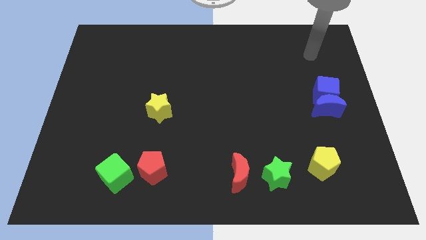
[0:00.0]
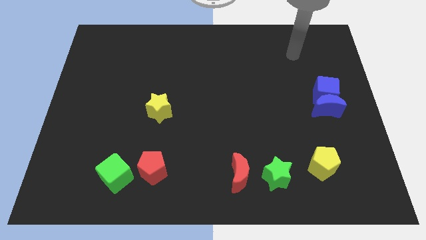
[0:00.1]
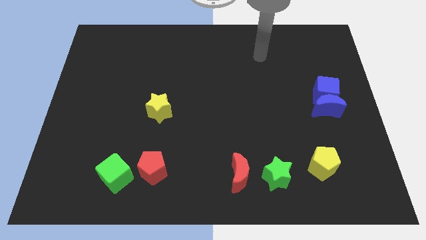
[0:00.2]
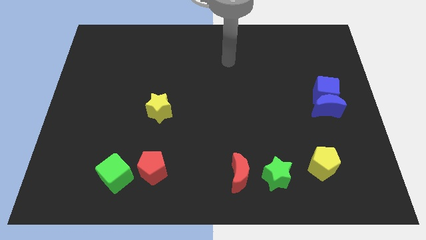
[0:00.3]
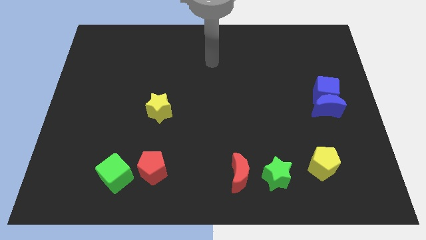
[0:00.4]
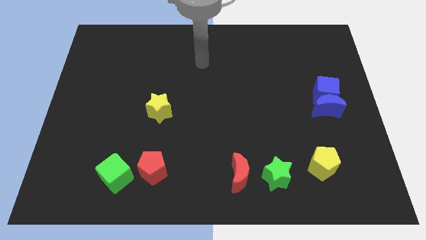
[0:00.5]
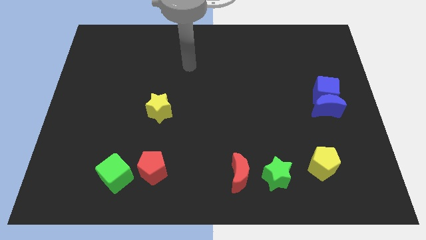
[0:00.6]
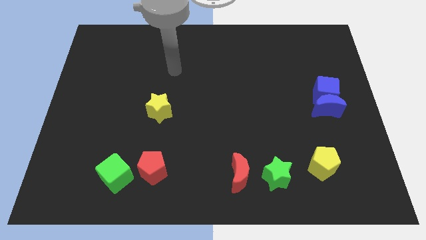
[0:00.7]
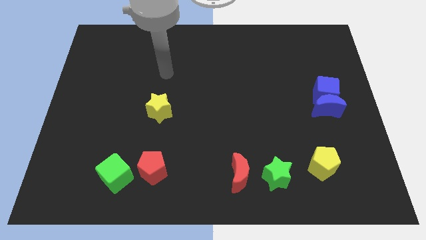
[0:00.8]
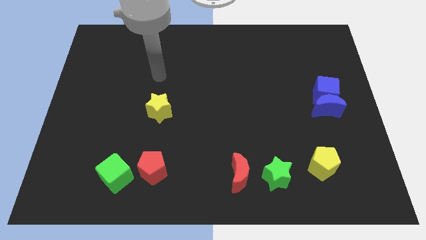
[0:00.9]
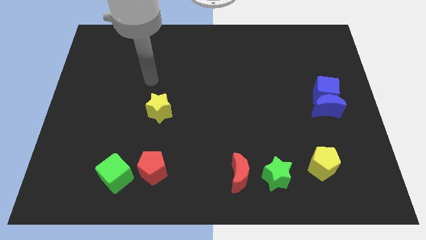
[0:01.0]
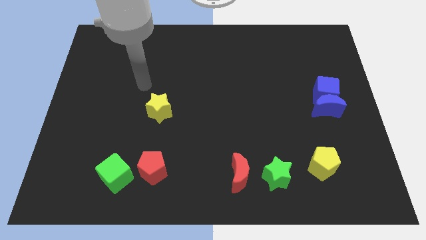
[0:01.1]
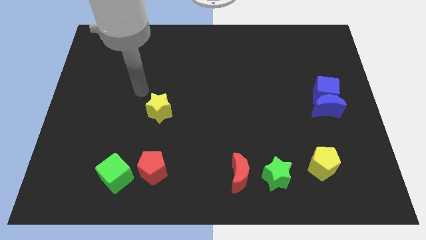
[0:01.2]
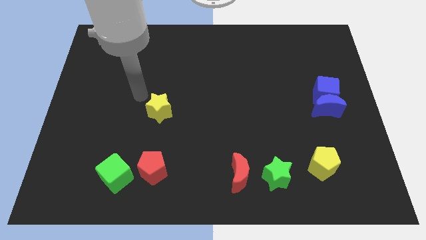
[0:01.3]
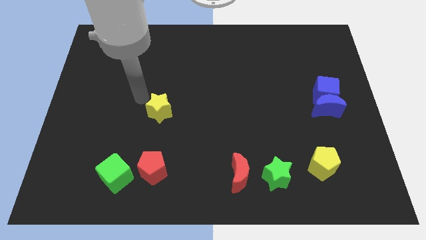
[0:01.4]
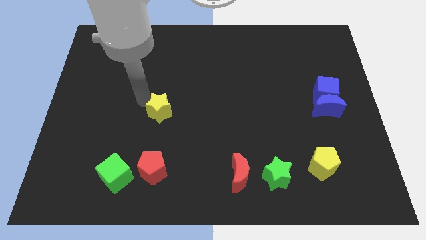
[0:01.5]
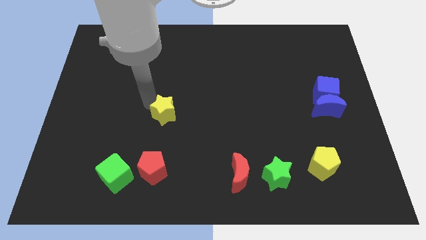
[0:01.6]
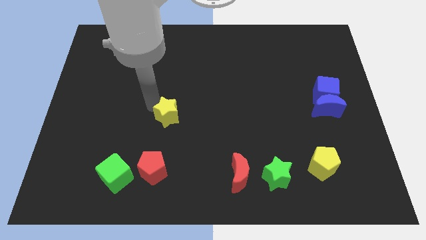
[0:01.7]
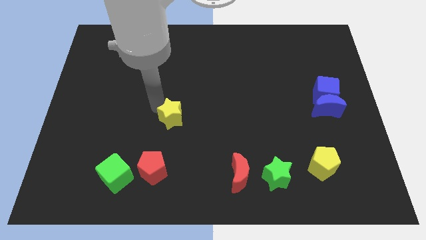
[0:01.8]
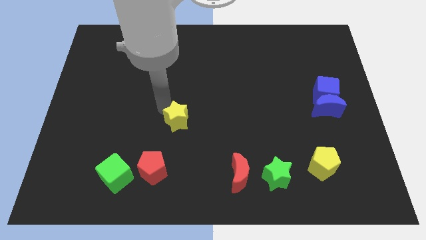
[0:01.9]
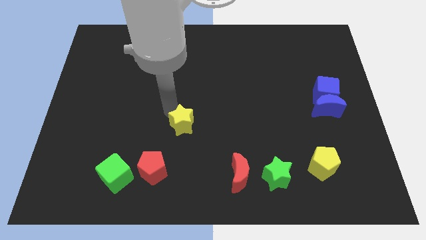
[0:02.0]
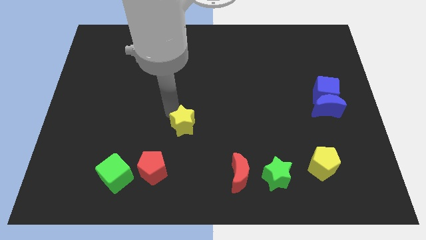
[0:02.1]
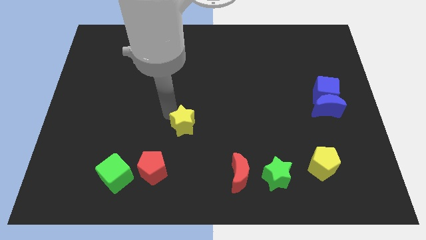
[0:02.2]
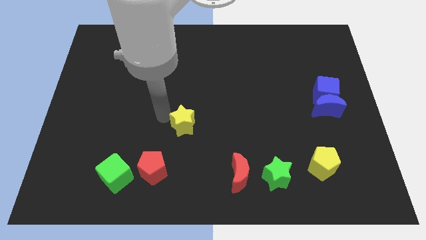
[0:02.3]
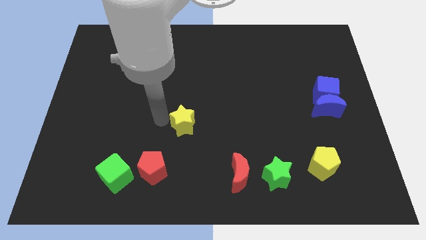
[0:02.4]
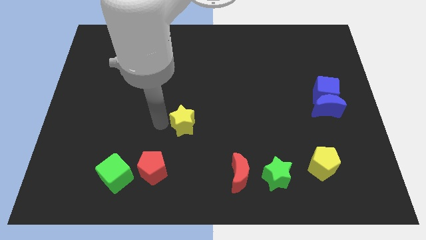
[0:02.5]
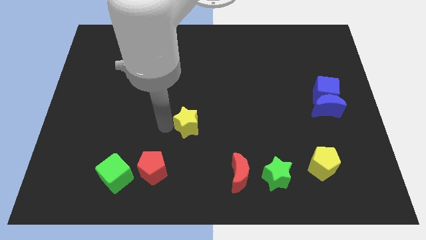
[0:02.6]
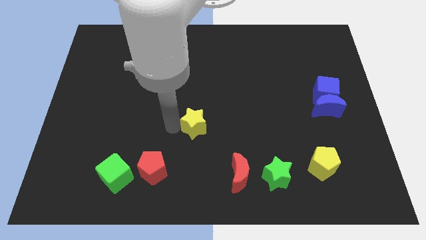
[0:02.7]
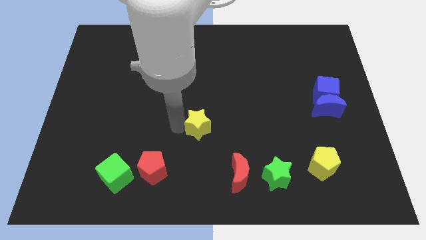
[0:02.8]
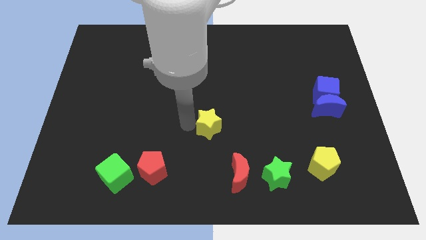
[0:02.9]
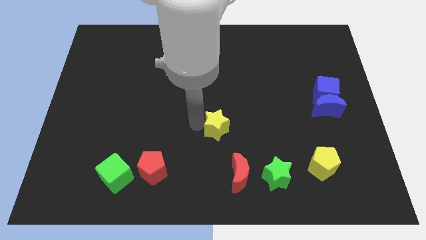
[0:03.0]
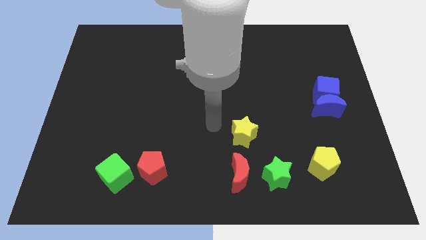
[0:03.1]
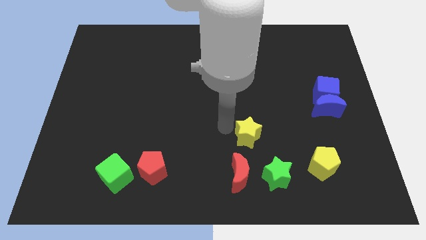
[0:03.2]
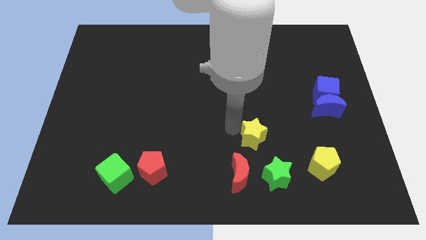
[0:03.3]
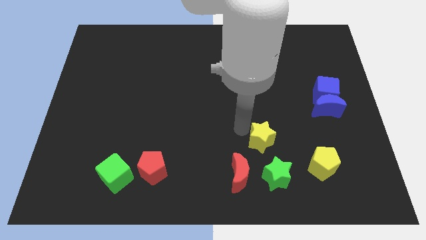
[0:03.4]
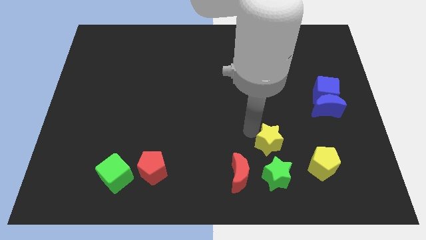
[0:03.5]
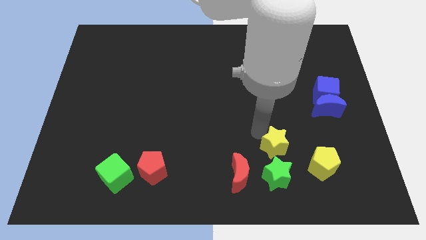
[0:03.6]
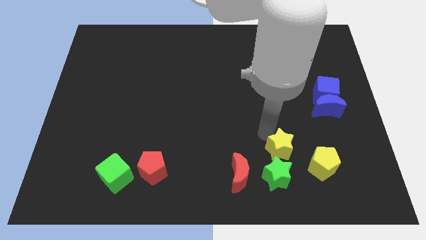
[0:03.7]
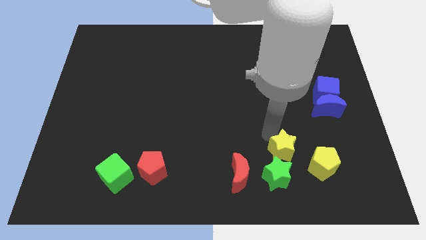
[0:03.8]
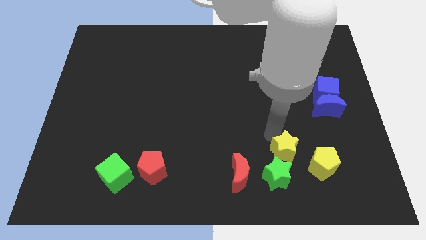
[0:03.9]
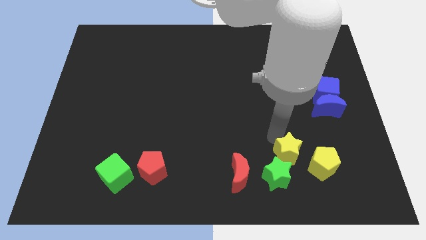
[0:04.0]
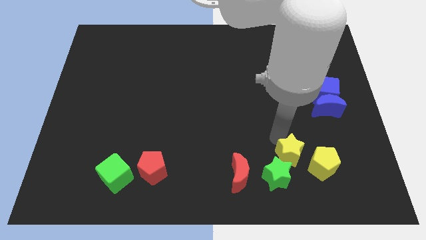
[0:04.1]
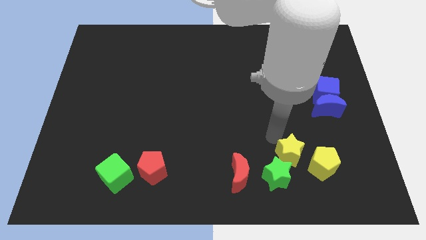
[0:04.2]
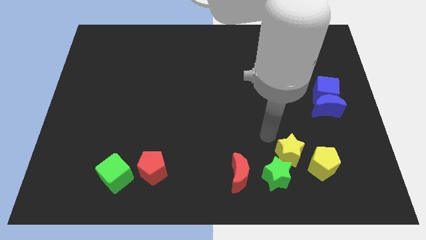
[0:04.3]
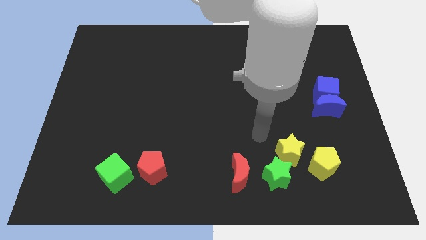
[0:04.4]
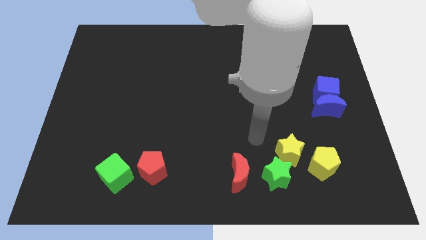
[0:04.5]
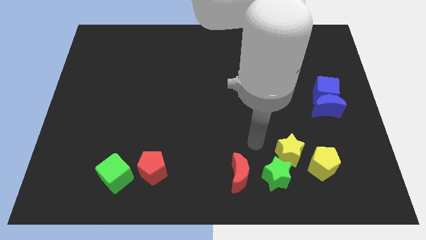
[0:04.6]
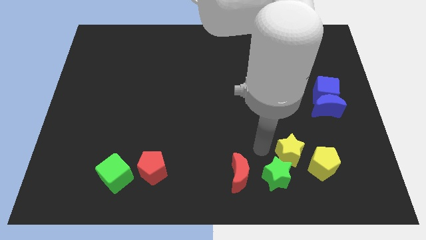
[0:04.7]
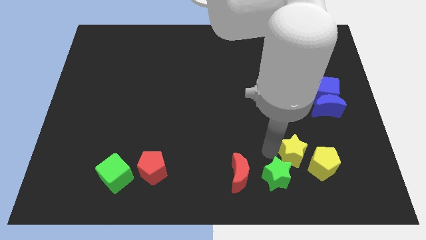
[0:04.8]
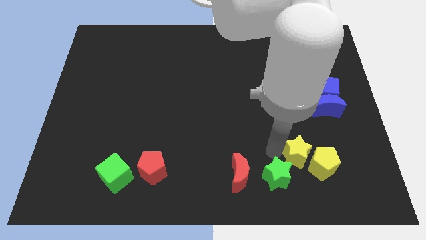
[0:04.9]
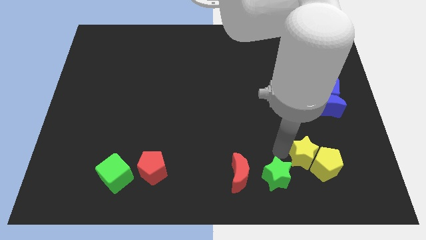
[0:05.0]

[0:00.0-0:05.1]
put the yellow star to the yellow pentagon

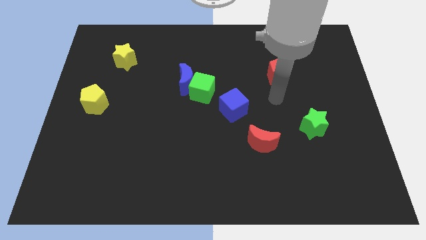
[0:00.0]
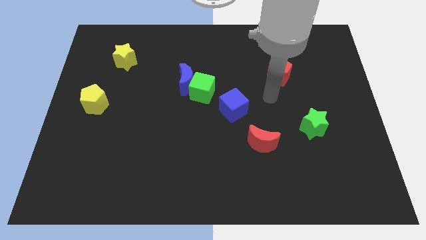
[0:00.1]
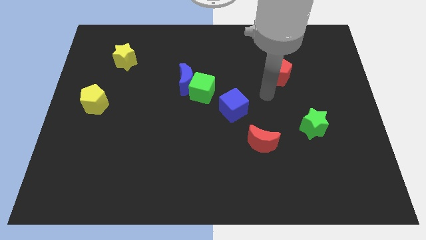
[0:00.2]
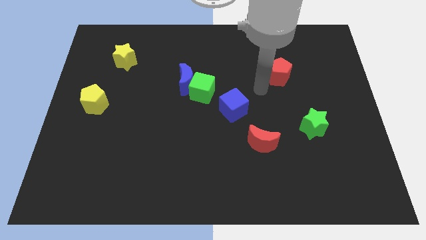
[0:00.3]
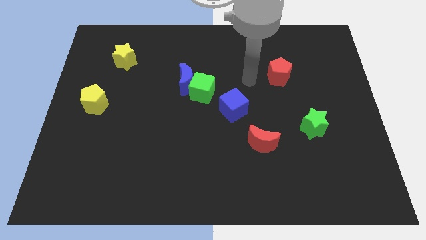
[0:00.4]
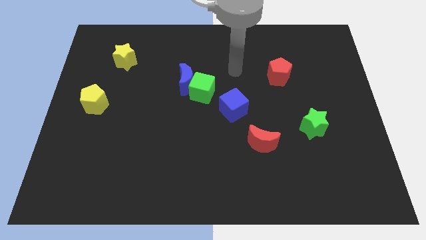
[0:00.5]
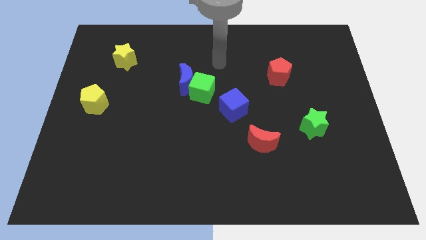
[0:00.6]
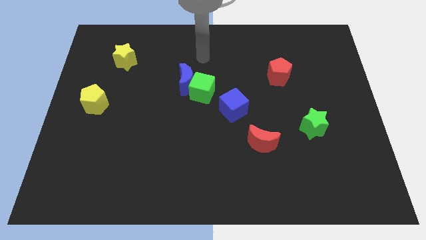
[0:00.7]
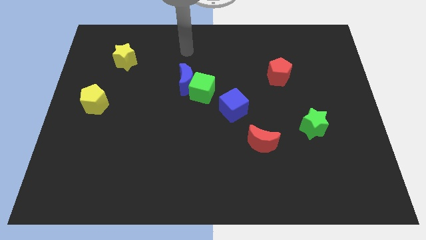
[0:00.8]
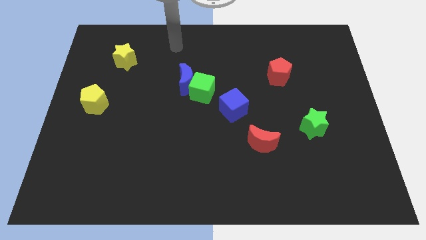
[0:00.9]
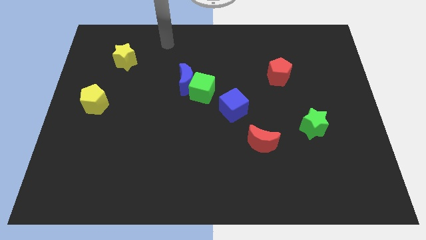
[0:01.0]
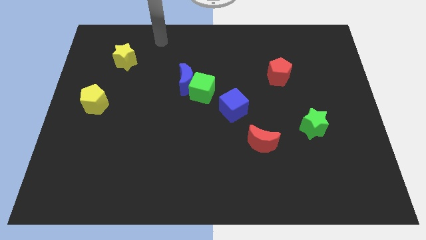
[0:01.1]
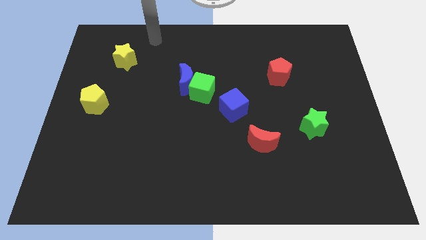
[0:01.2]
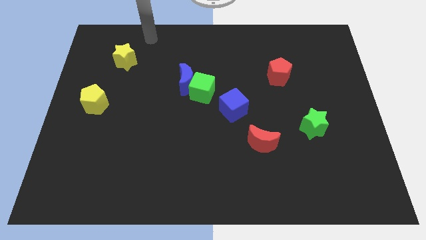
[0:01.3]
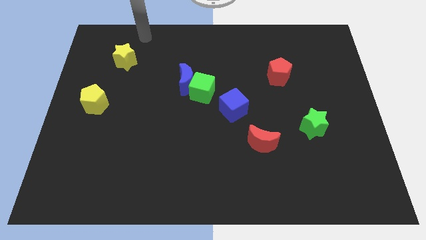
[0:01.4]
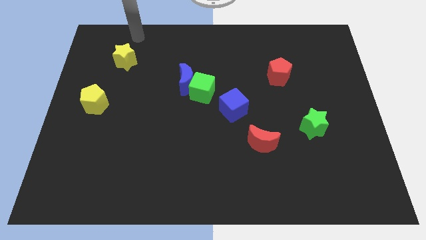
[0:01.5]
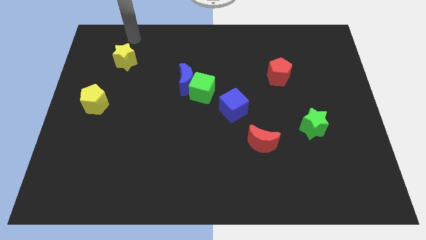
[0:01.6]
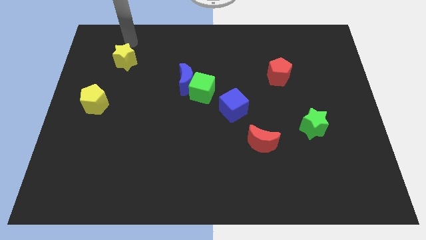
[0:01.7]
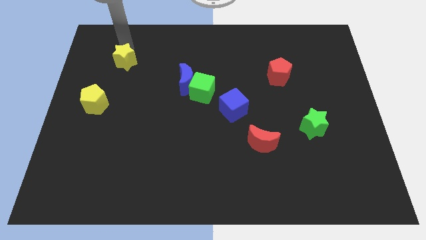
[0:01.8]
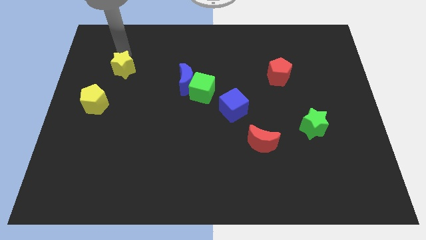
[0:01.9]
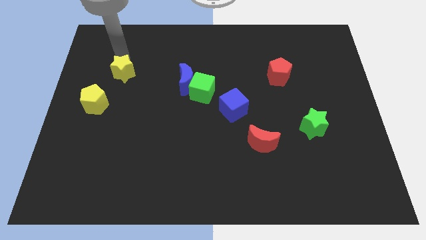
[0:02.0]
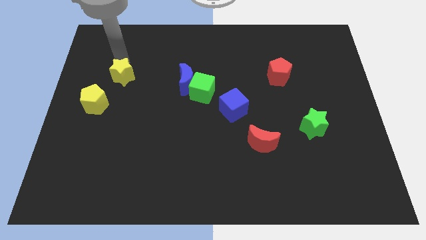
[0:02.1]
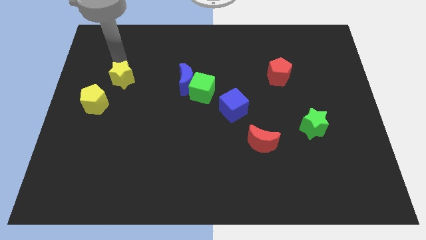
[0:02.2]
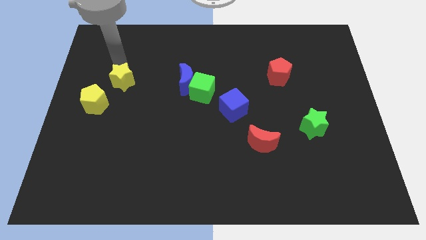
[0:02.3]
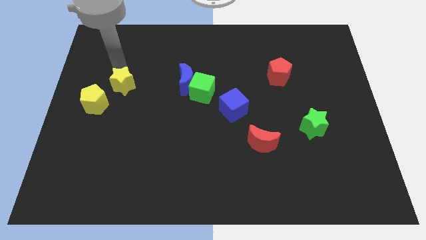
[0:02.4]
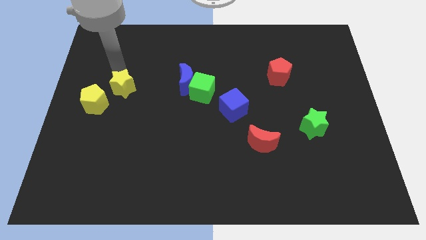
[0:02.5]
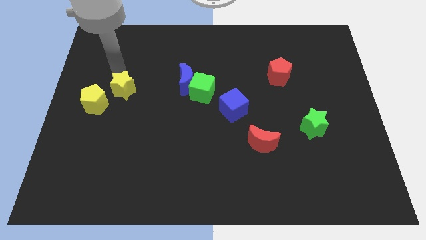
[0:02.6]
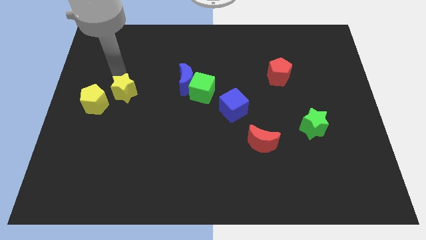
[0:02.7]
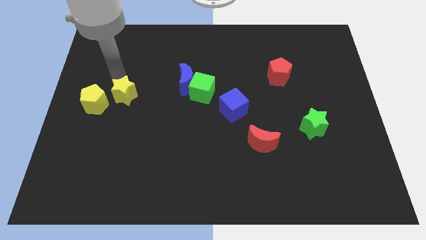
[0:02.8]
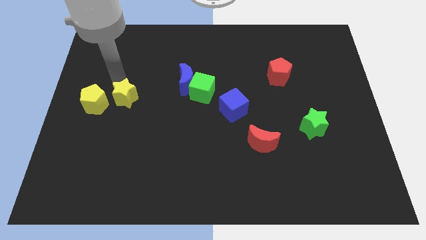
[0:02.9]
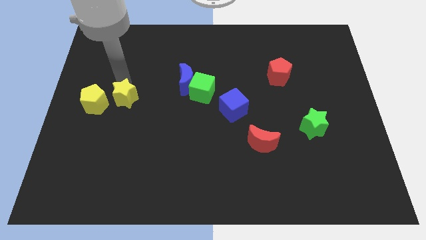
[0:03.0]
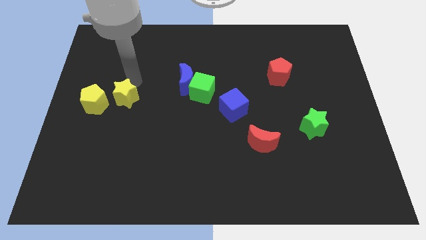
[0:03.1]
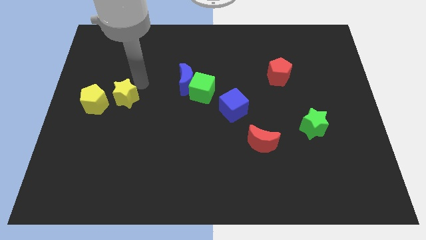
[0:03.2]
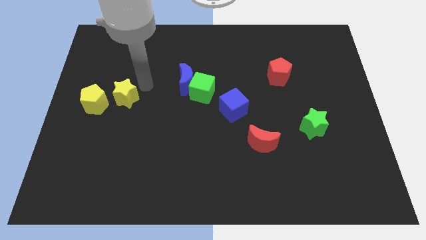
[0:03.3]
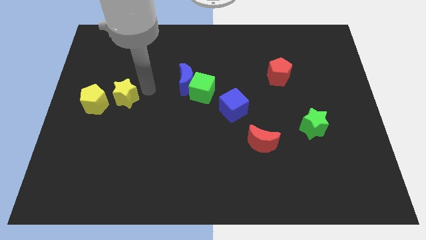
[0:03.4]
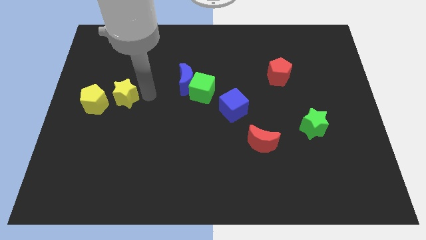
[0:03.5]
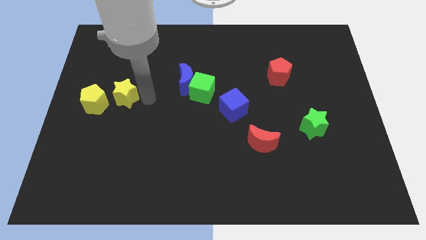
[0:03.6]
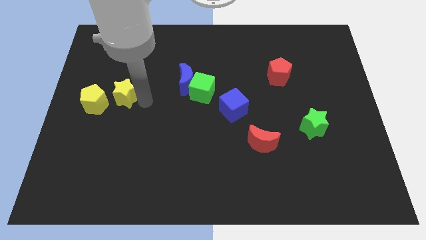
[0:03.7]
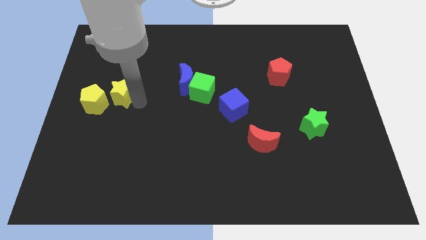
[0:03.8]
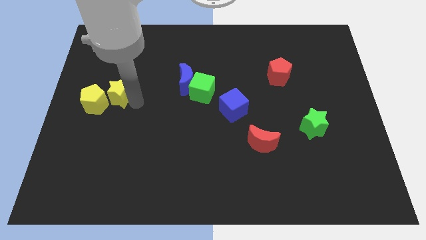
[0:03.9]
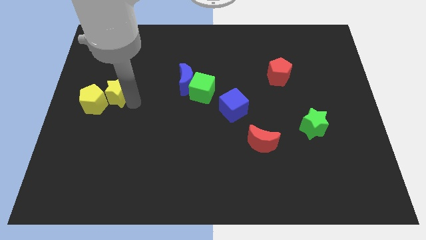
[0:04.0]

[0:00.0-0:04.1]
slide the yellow star next to the yellow pentagon
